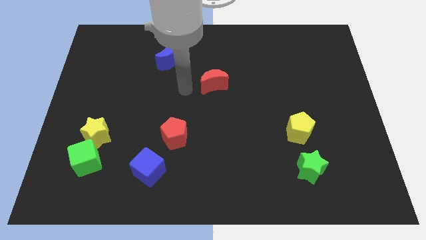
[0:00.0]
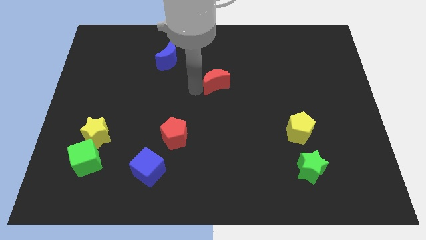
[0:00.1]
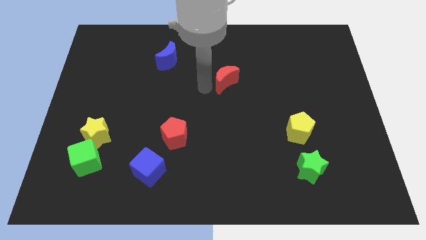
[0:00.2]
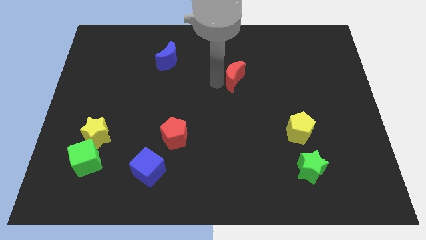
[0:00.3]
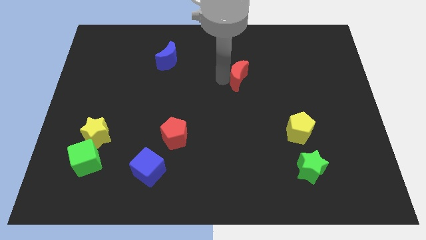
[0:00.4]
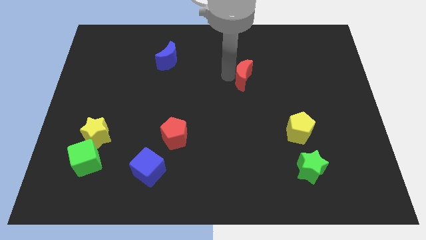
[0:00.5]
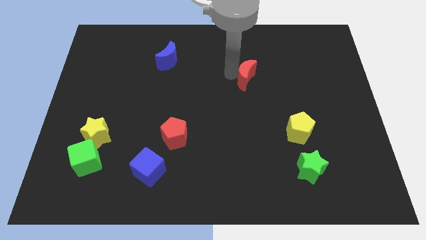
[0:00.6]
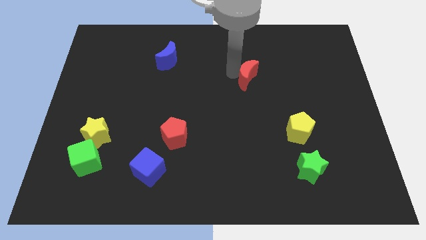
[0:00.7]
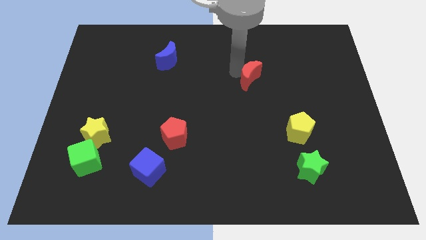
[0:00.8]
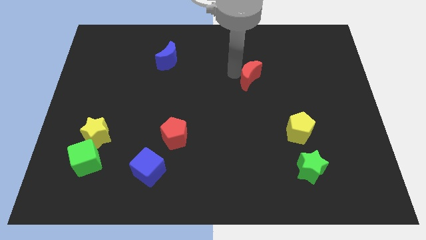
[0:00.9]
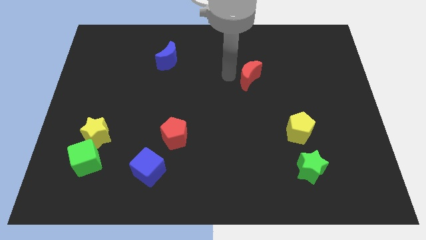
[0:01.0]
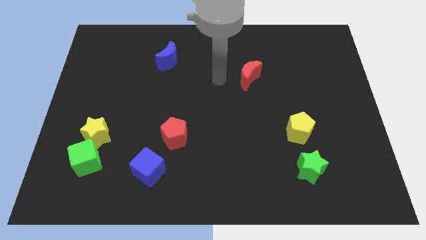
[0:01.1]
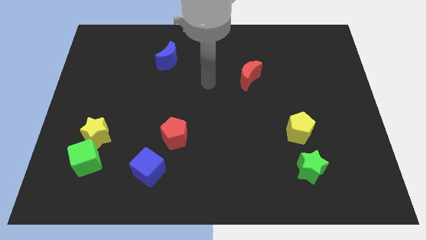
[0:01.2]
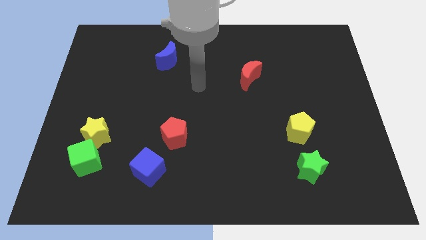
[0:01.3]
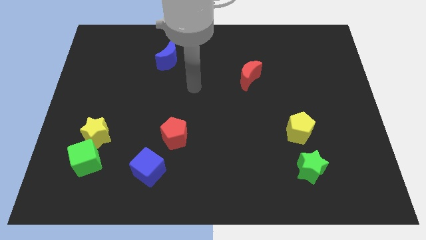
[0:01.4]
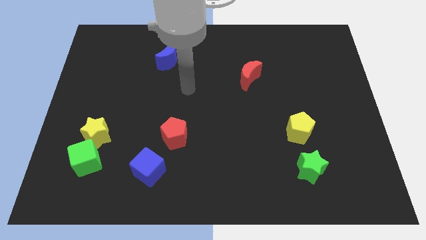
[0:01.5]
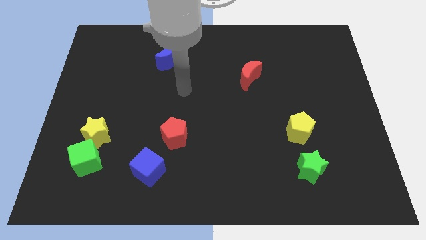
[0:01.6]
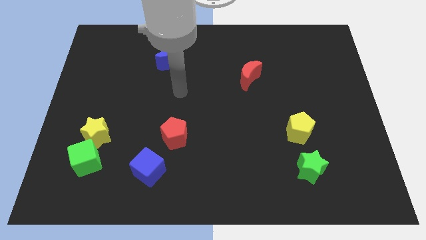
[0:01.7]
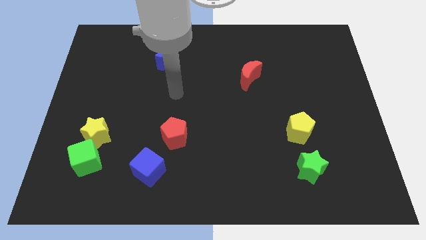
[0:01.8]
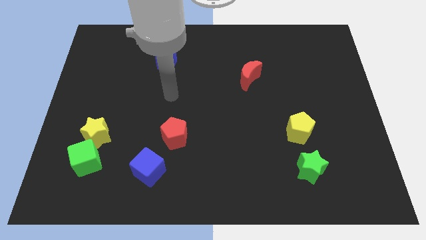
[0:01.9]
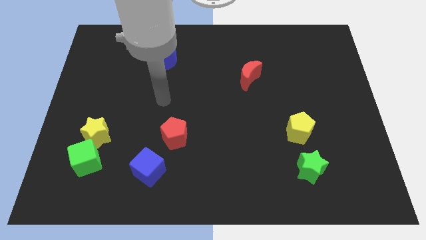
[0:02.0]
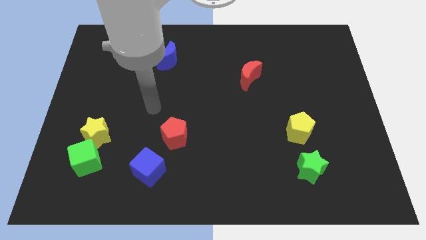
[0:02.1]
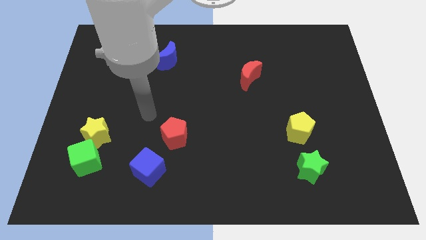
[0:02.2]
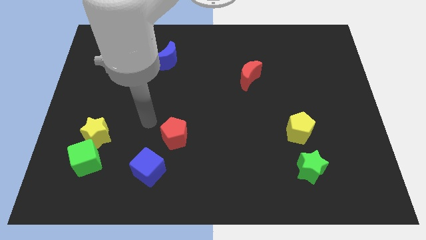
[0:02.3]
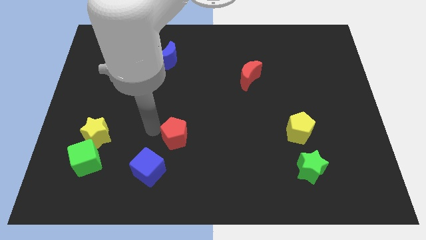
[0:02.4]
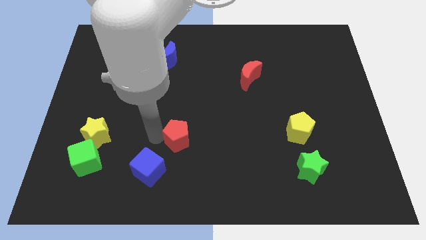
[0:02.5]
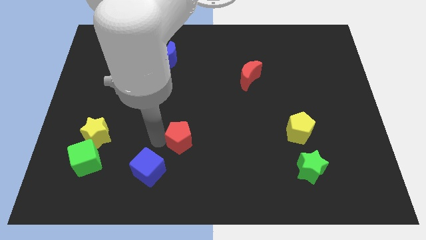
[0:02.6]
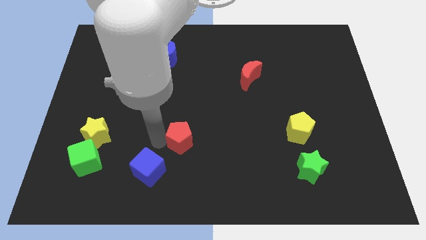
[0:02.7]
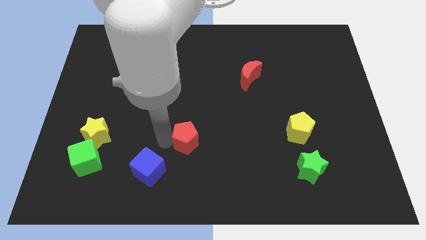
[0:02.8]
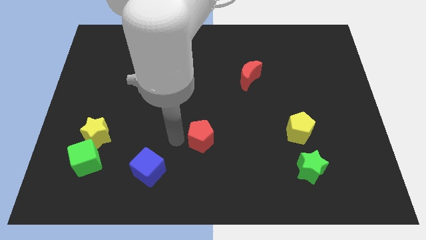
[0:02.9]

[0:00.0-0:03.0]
place red moon diagonally right above red pentagon

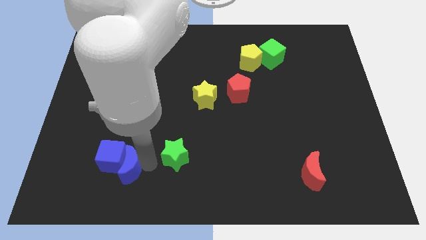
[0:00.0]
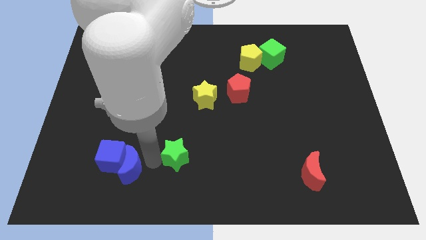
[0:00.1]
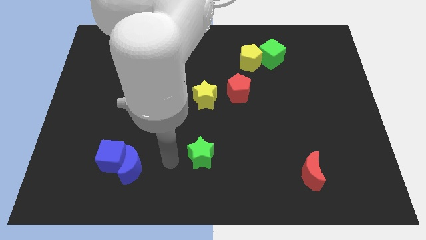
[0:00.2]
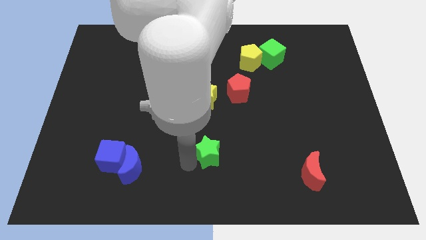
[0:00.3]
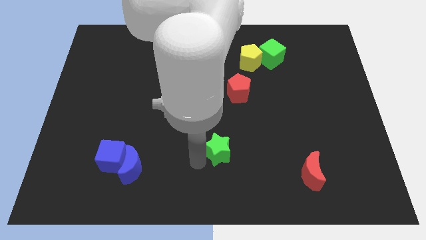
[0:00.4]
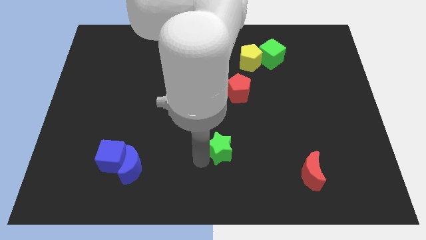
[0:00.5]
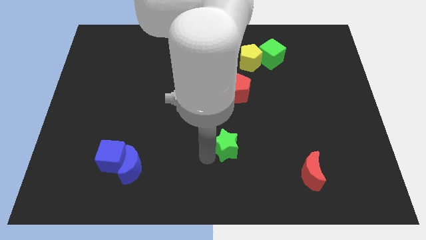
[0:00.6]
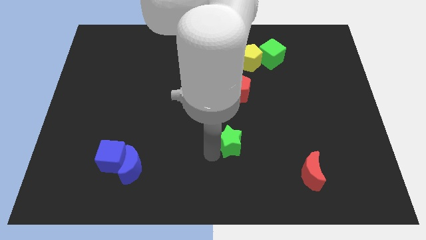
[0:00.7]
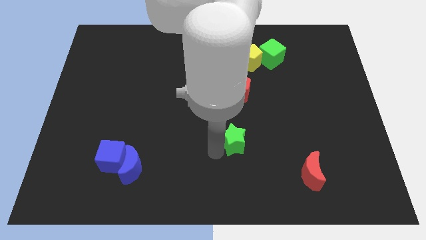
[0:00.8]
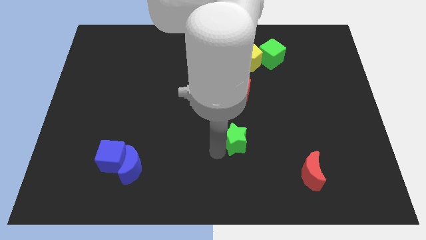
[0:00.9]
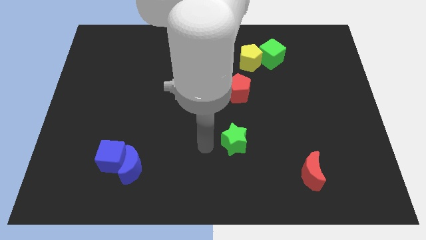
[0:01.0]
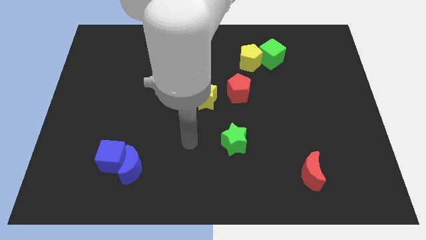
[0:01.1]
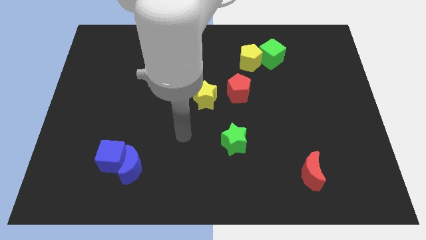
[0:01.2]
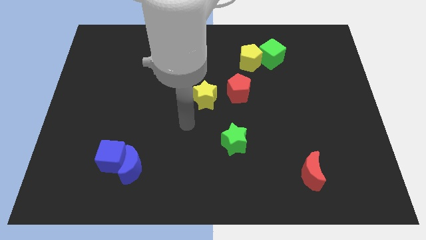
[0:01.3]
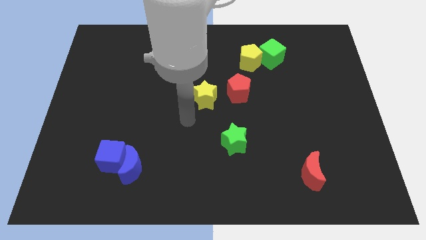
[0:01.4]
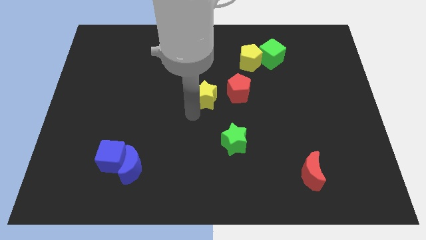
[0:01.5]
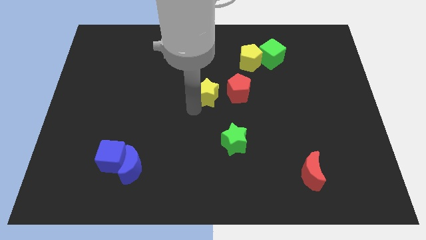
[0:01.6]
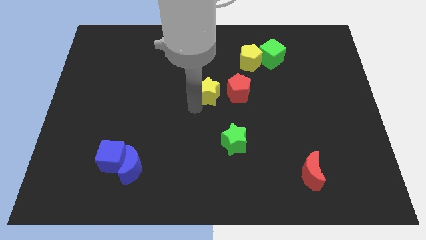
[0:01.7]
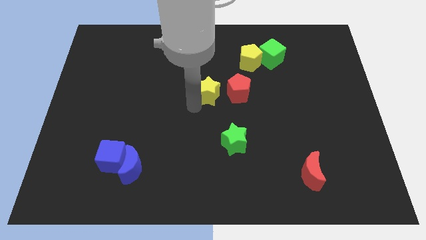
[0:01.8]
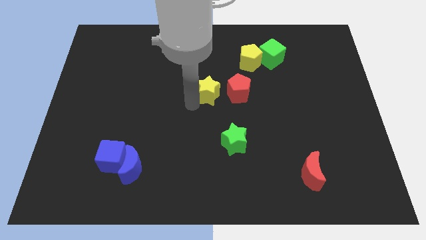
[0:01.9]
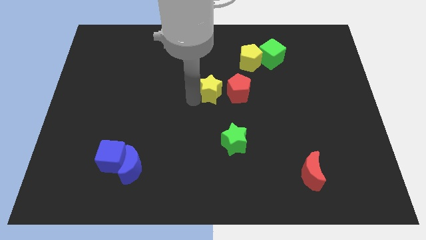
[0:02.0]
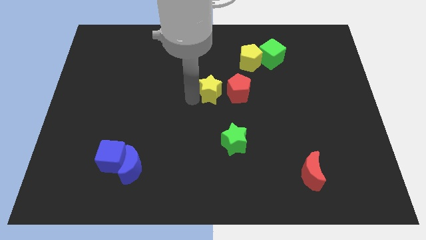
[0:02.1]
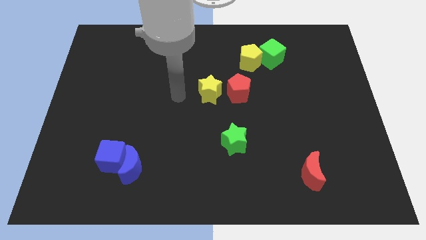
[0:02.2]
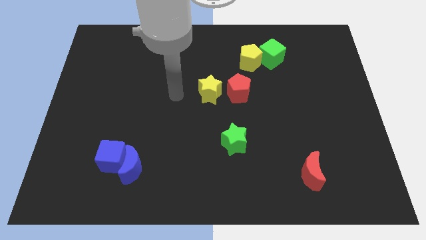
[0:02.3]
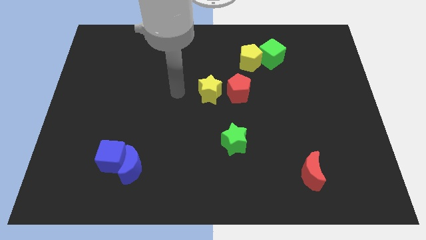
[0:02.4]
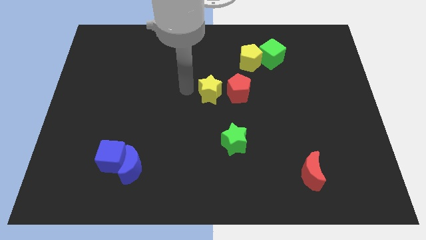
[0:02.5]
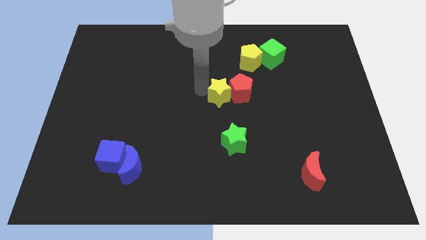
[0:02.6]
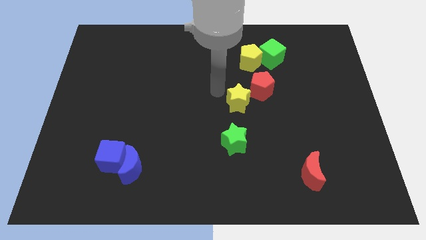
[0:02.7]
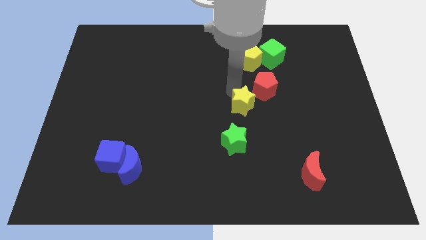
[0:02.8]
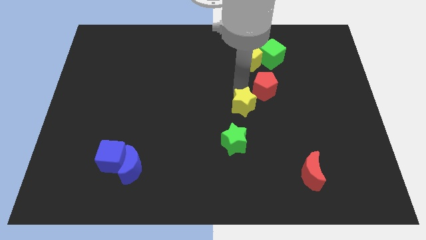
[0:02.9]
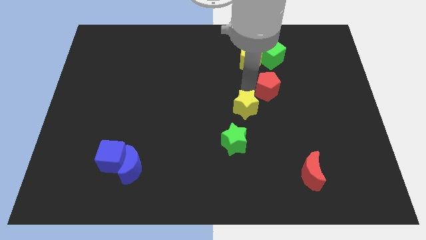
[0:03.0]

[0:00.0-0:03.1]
place yellow star diagonally upwards green star

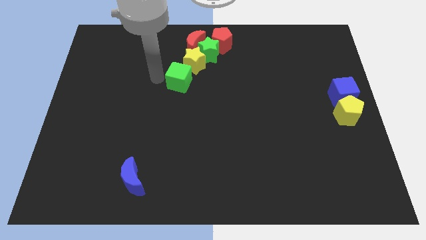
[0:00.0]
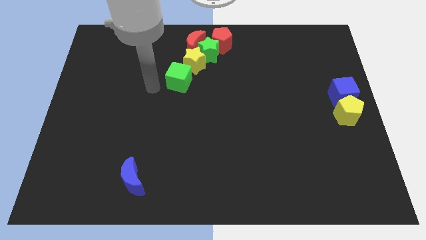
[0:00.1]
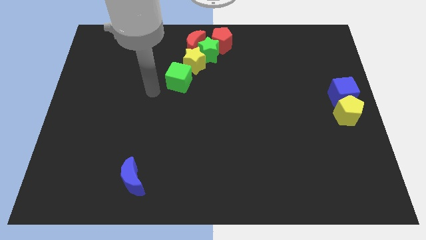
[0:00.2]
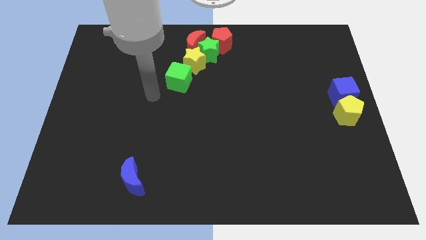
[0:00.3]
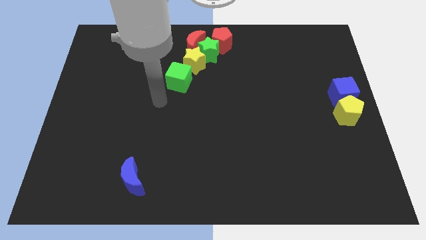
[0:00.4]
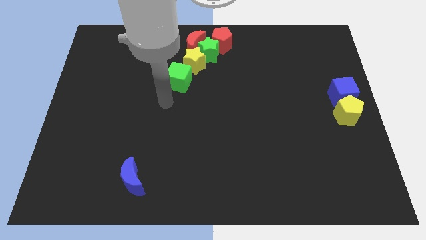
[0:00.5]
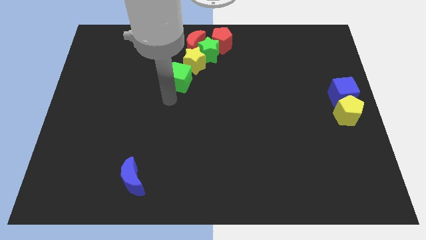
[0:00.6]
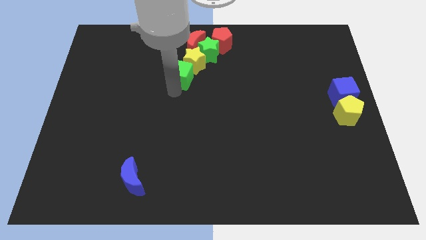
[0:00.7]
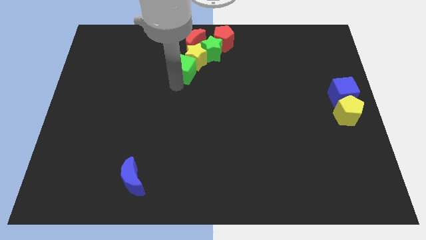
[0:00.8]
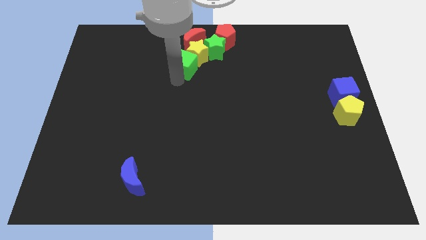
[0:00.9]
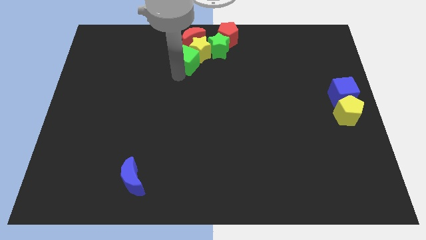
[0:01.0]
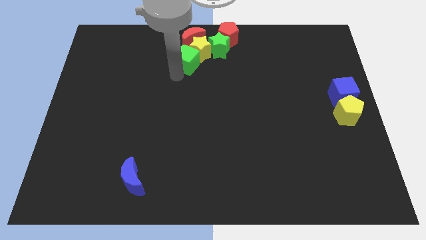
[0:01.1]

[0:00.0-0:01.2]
push the green cube into the yellow star

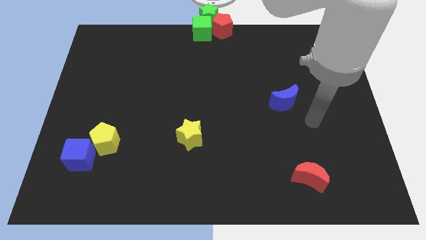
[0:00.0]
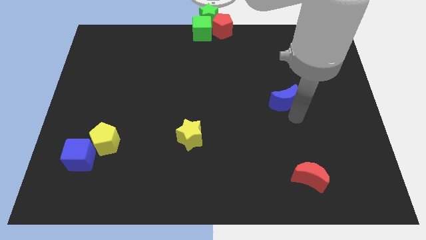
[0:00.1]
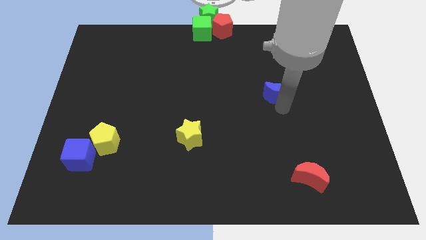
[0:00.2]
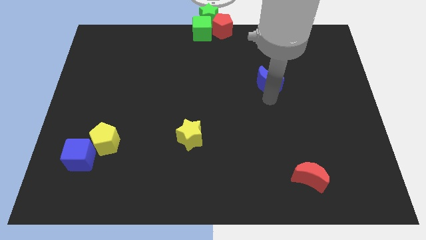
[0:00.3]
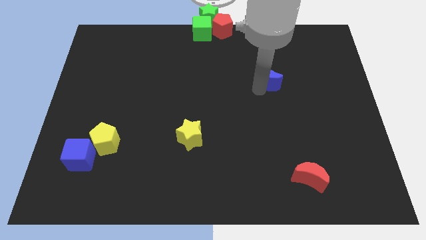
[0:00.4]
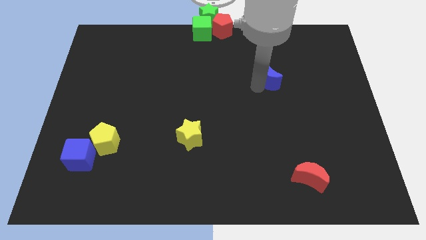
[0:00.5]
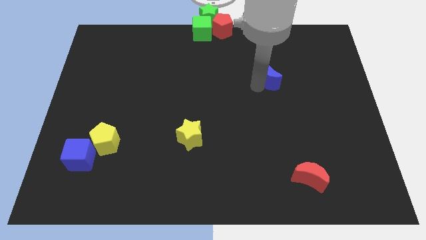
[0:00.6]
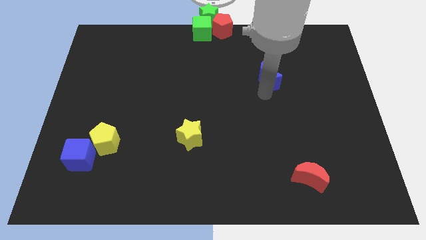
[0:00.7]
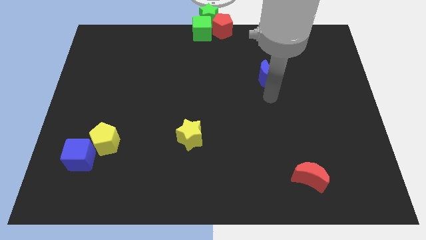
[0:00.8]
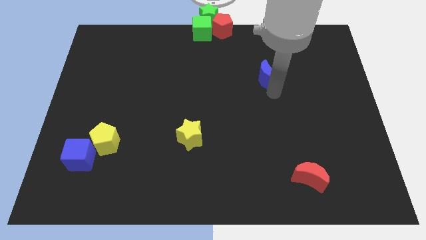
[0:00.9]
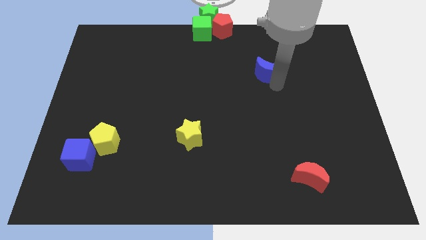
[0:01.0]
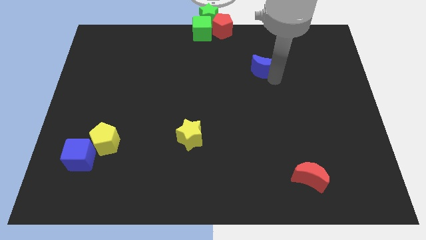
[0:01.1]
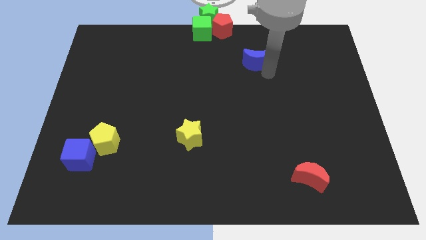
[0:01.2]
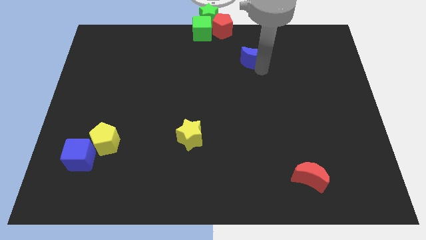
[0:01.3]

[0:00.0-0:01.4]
push the blue crescent towards the group of blocks

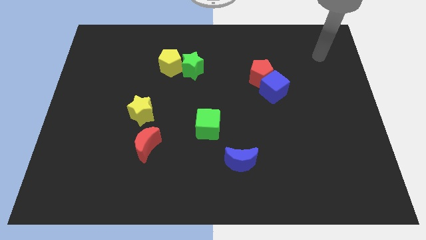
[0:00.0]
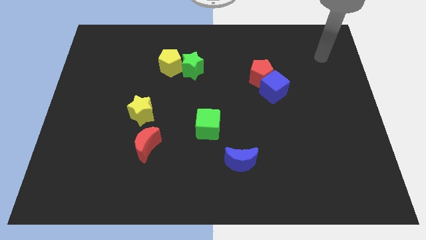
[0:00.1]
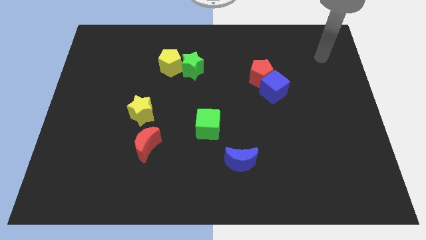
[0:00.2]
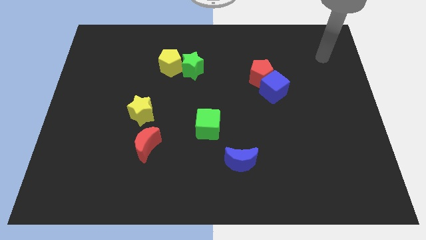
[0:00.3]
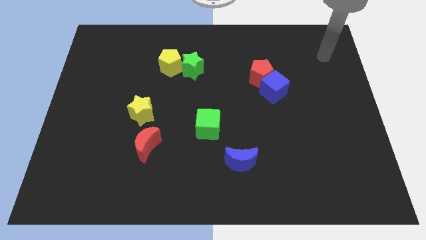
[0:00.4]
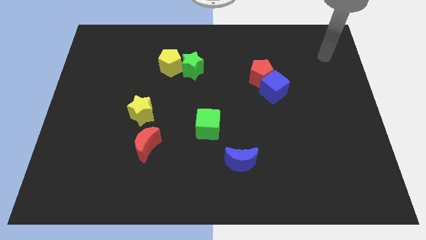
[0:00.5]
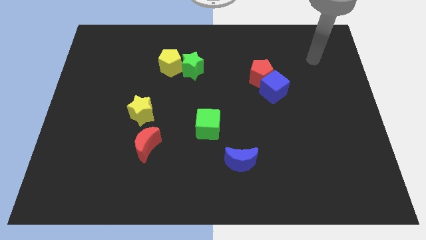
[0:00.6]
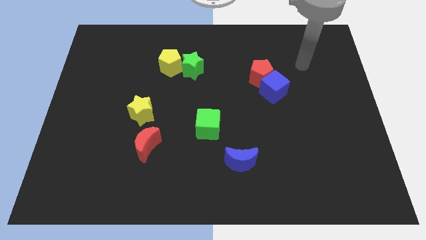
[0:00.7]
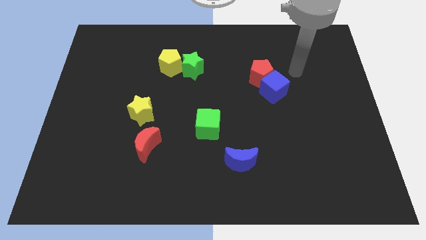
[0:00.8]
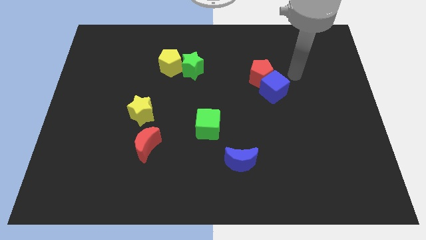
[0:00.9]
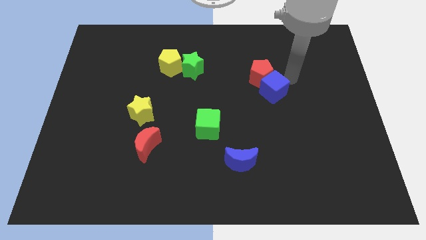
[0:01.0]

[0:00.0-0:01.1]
place your hand close to the blue cube
